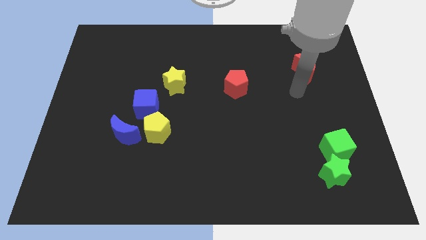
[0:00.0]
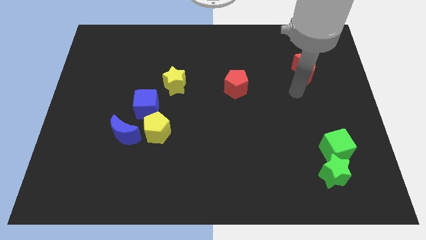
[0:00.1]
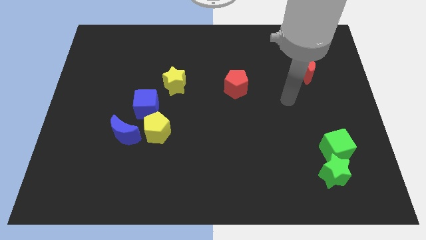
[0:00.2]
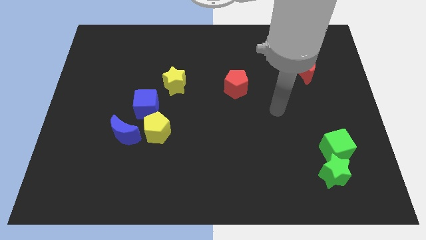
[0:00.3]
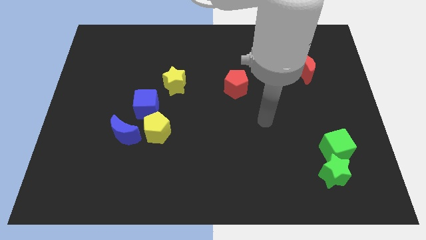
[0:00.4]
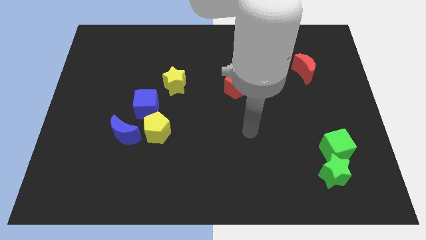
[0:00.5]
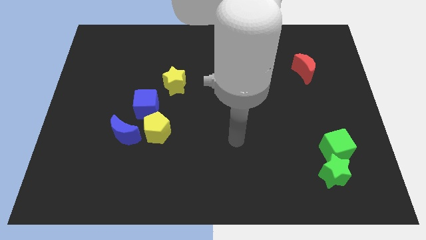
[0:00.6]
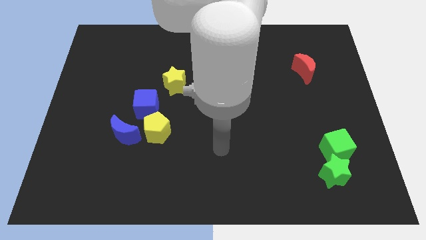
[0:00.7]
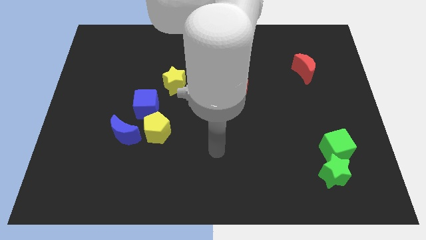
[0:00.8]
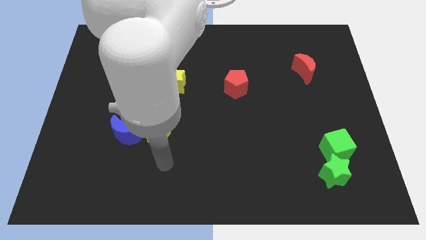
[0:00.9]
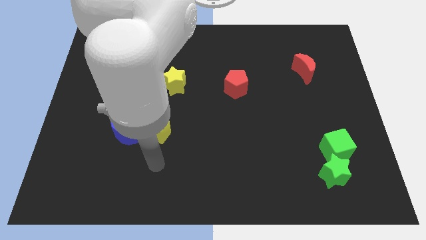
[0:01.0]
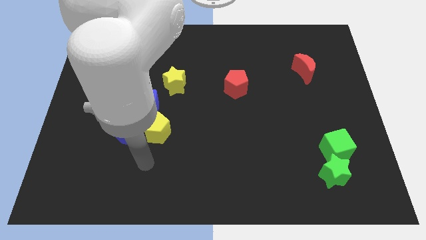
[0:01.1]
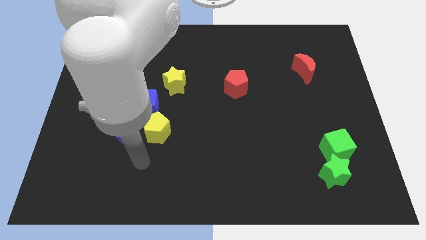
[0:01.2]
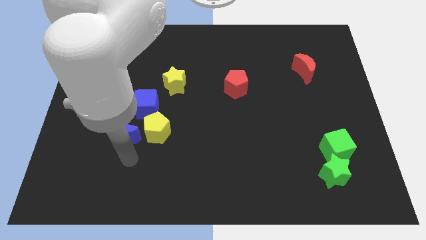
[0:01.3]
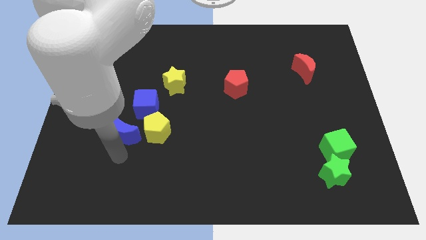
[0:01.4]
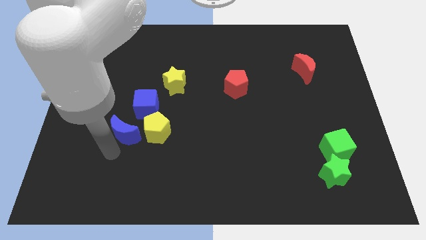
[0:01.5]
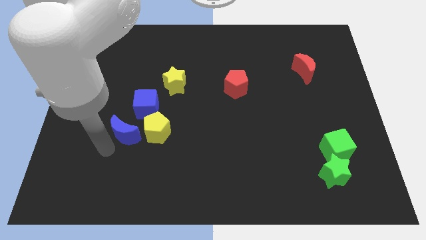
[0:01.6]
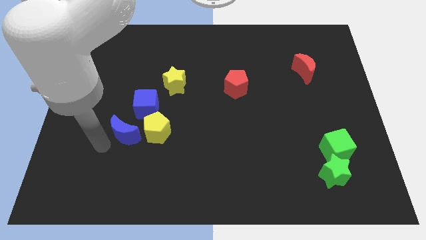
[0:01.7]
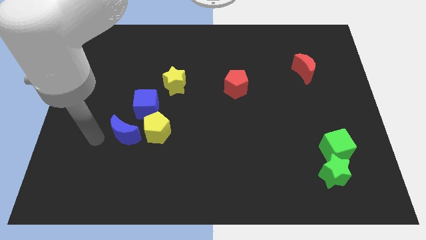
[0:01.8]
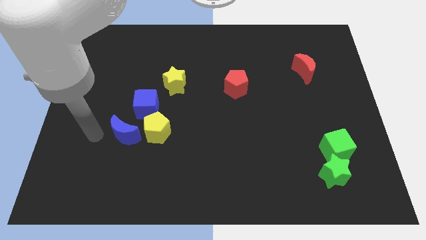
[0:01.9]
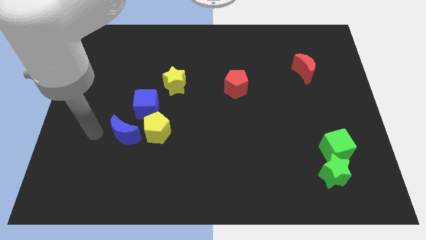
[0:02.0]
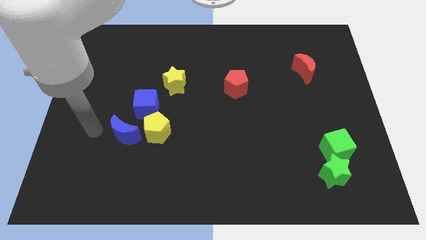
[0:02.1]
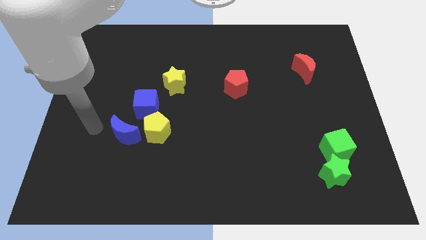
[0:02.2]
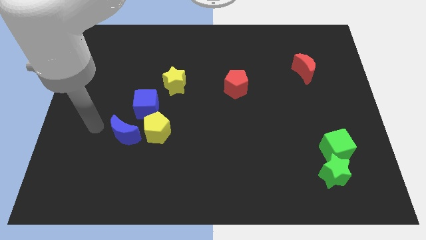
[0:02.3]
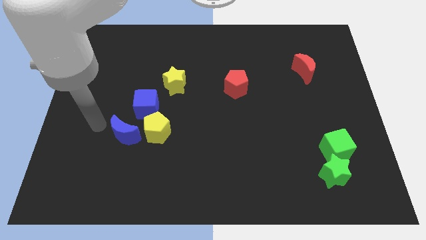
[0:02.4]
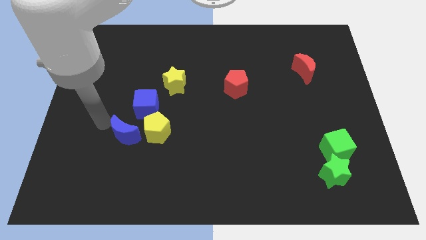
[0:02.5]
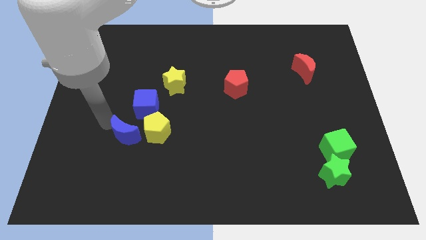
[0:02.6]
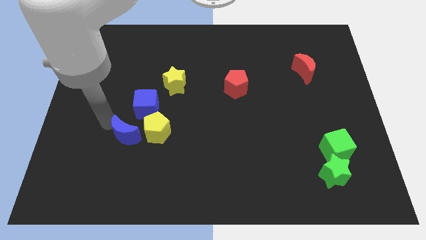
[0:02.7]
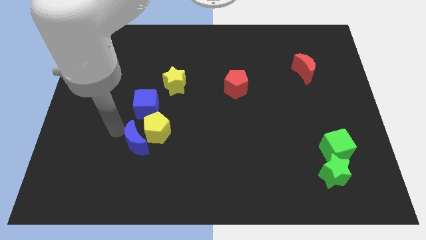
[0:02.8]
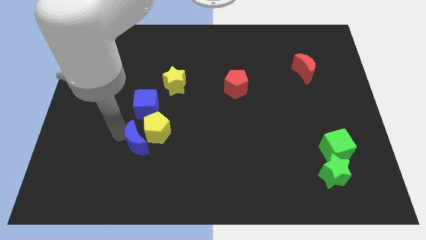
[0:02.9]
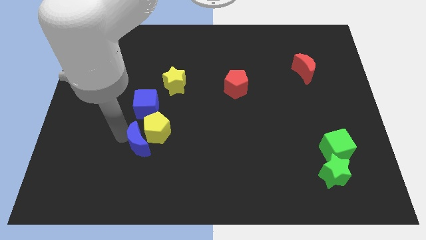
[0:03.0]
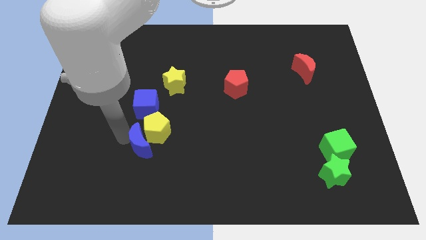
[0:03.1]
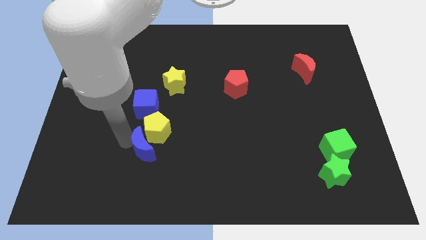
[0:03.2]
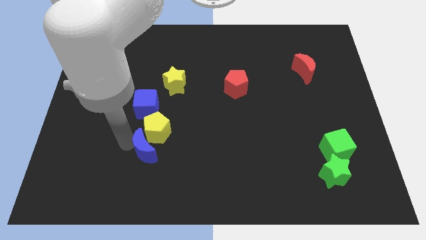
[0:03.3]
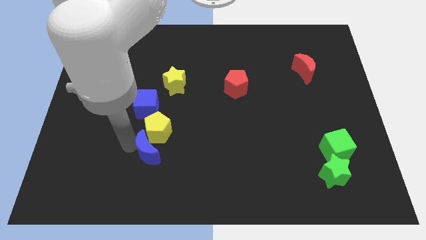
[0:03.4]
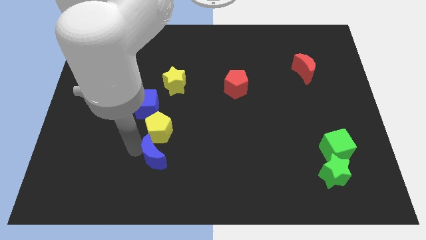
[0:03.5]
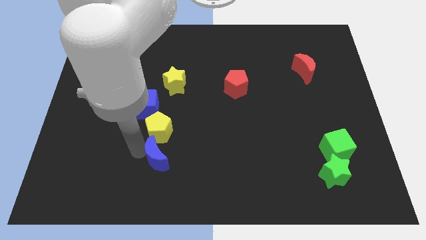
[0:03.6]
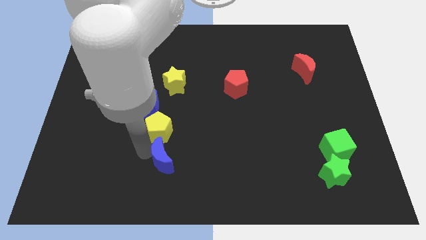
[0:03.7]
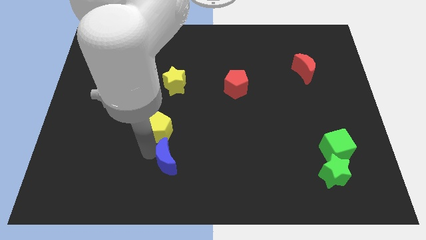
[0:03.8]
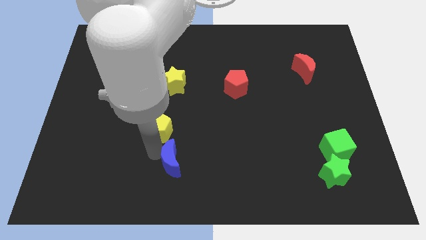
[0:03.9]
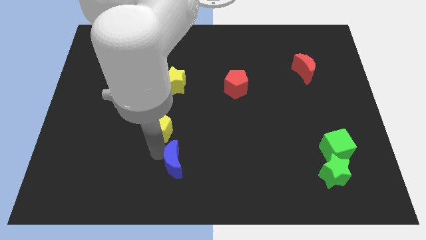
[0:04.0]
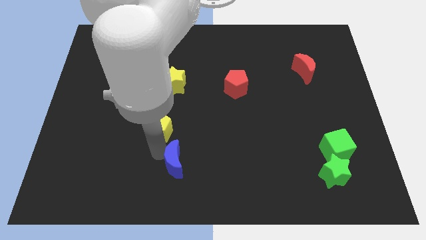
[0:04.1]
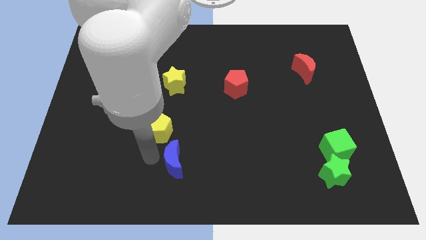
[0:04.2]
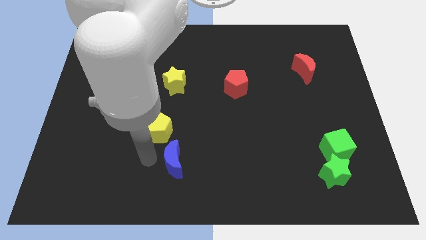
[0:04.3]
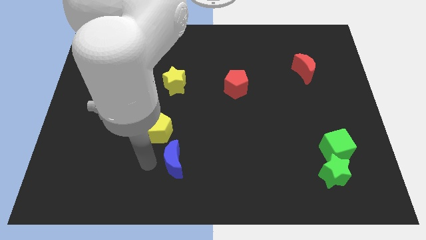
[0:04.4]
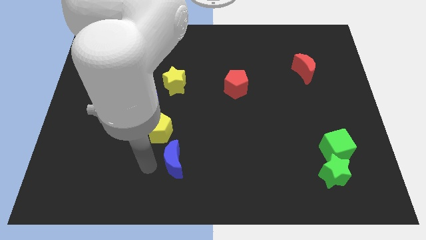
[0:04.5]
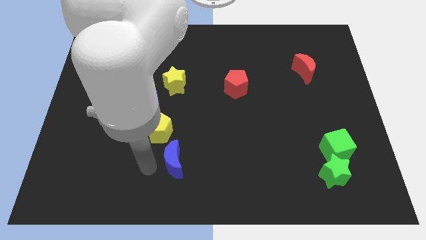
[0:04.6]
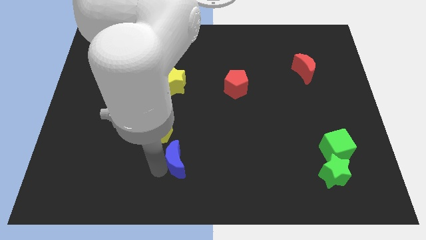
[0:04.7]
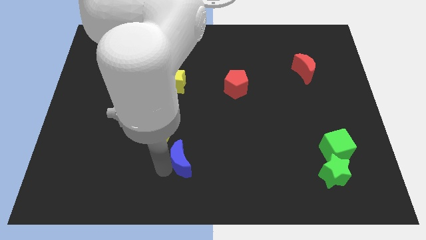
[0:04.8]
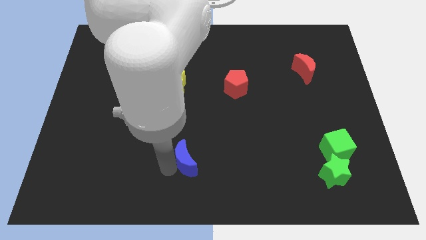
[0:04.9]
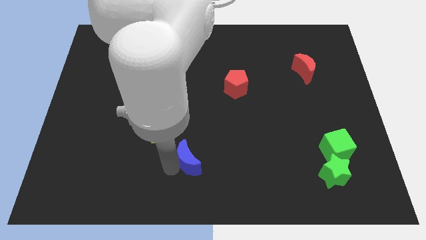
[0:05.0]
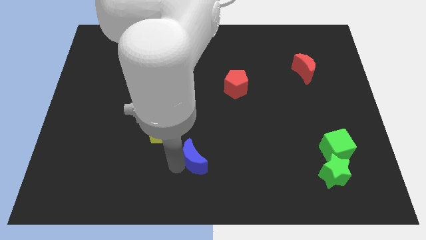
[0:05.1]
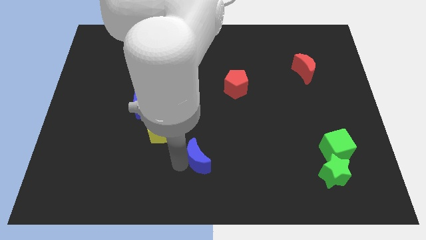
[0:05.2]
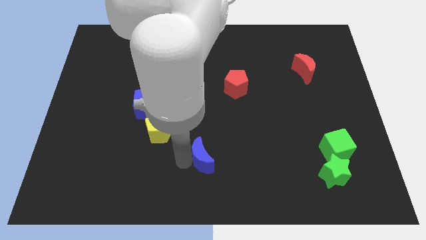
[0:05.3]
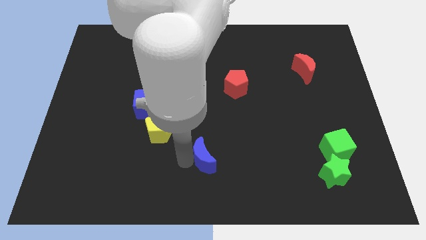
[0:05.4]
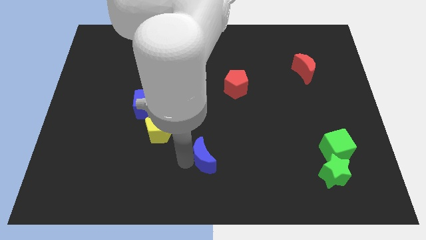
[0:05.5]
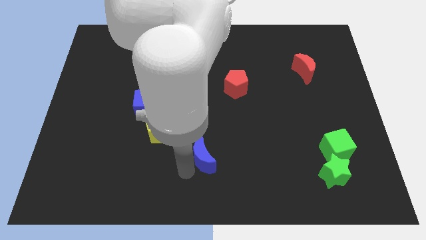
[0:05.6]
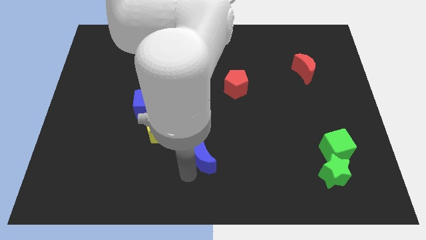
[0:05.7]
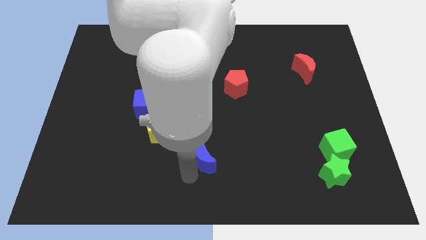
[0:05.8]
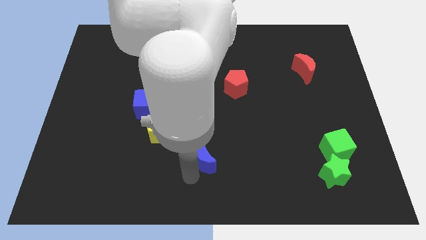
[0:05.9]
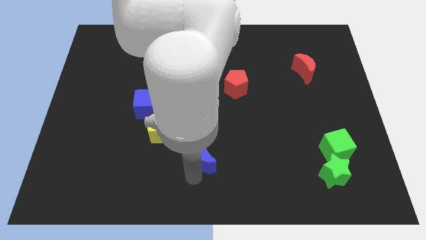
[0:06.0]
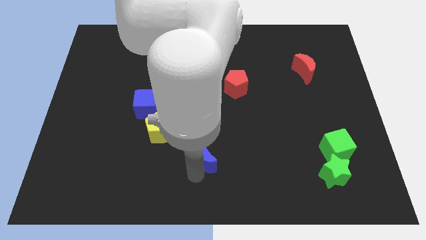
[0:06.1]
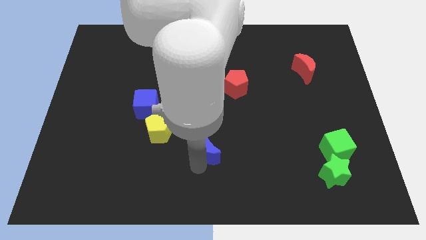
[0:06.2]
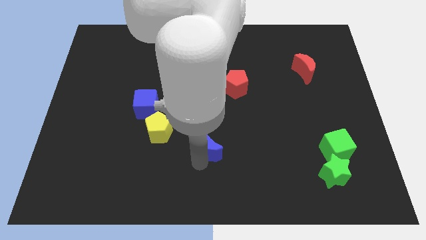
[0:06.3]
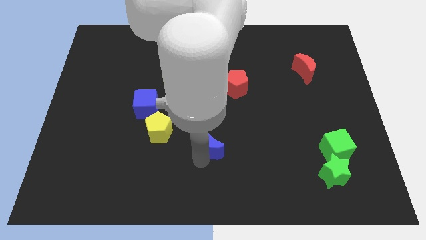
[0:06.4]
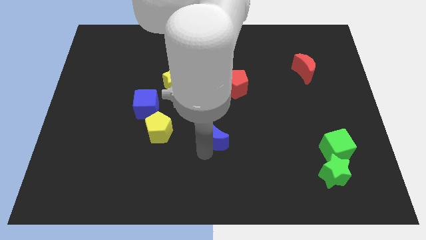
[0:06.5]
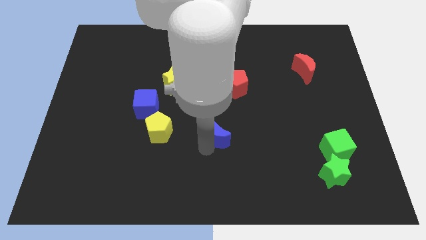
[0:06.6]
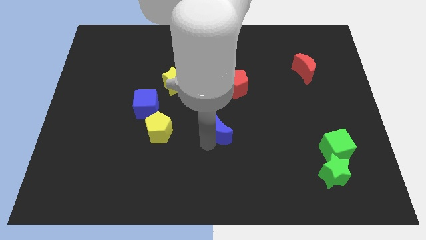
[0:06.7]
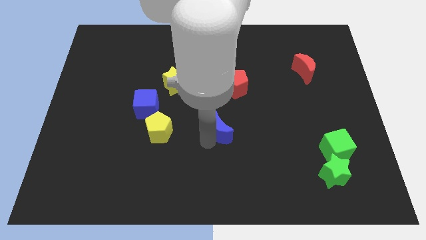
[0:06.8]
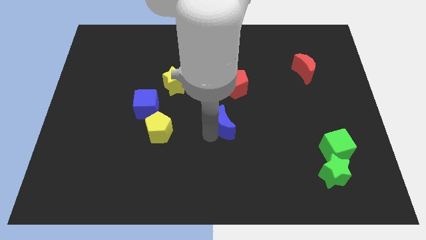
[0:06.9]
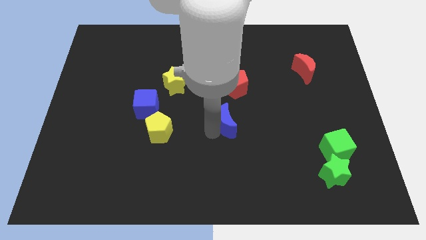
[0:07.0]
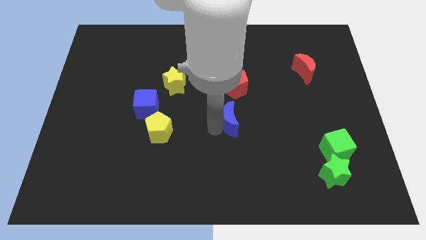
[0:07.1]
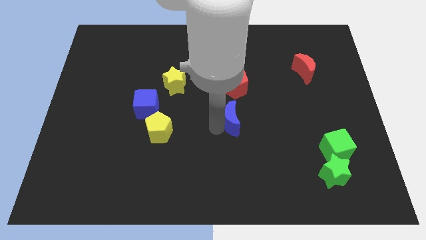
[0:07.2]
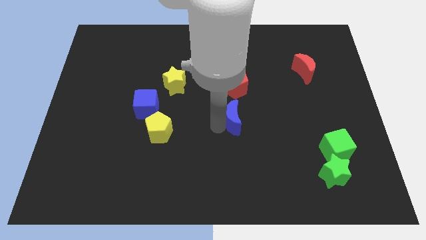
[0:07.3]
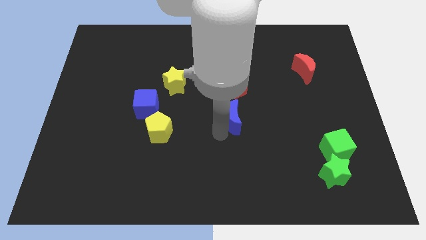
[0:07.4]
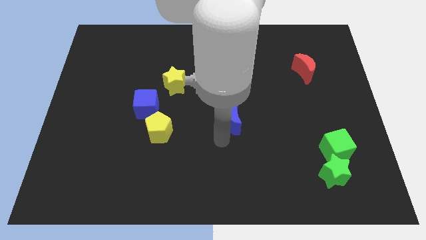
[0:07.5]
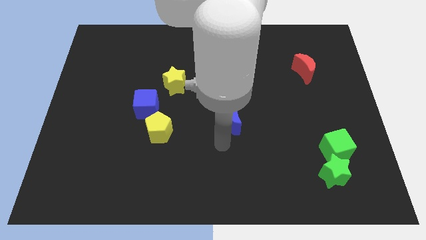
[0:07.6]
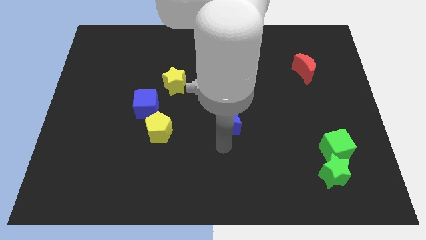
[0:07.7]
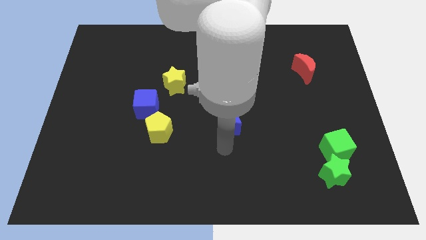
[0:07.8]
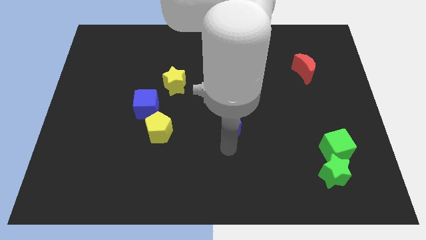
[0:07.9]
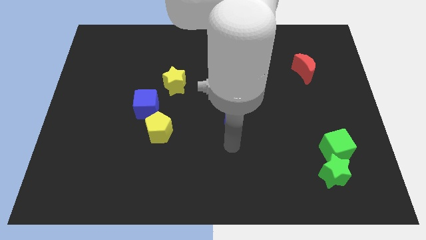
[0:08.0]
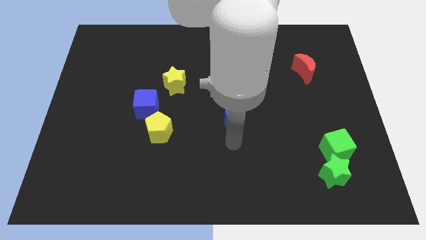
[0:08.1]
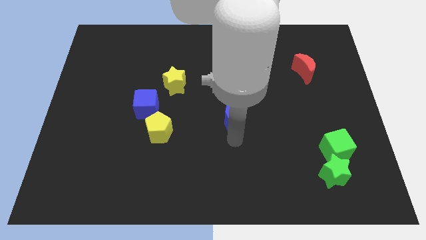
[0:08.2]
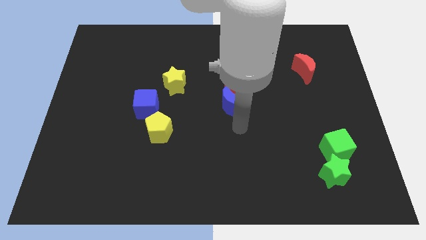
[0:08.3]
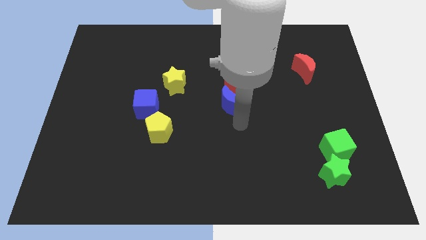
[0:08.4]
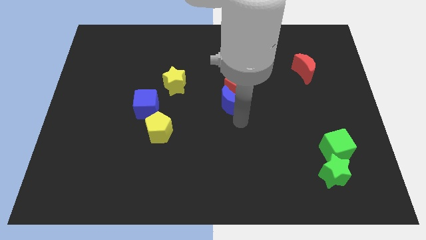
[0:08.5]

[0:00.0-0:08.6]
put the blue moon to the red pentagon

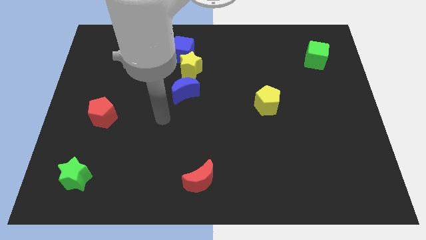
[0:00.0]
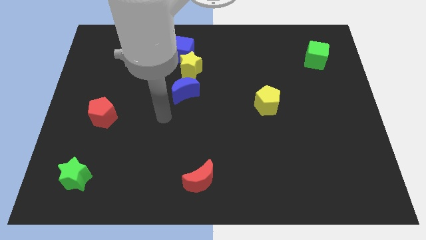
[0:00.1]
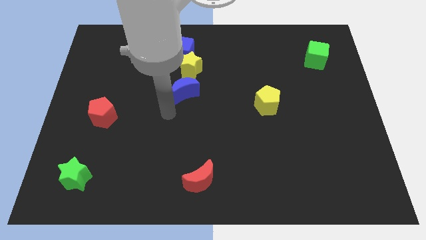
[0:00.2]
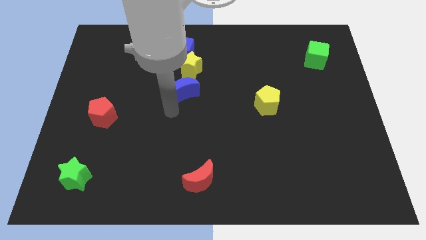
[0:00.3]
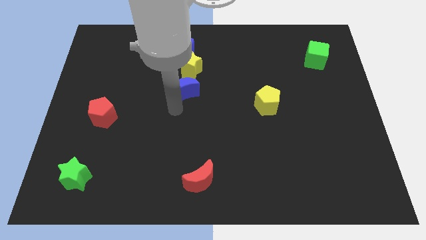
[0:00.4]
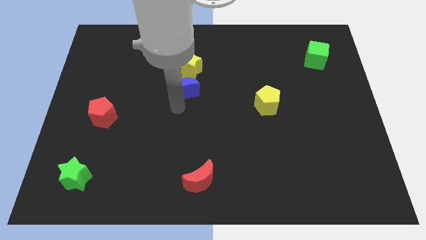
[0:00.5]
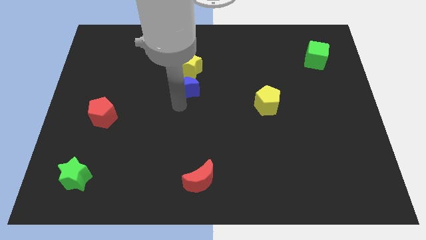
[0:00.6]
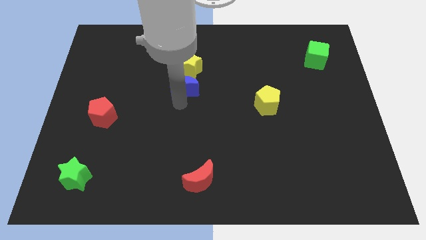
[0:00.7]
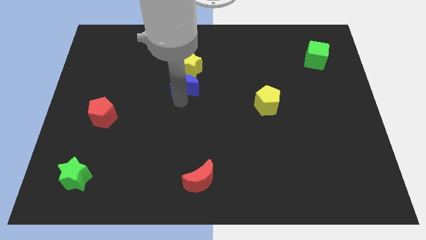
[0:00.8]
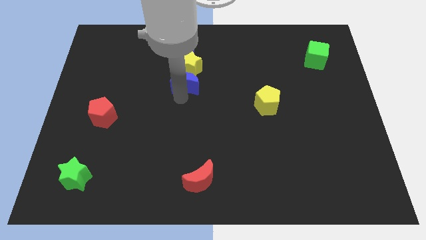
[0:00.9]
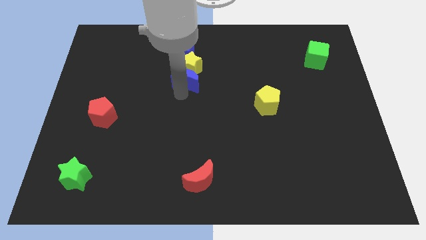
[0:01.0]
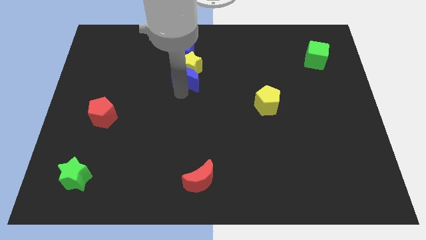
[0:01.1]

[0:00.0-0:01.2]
put the blue moon close to the yellow star
